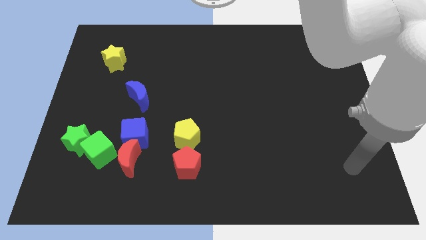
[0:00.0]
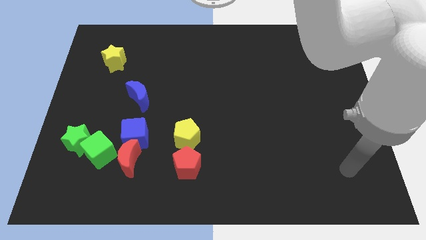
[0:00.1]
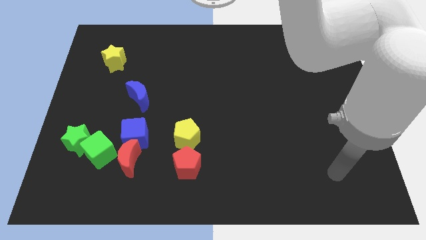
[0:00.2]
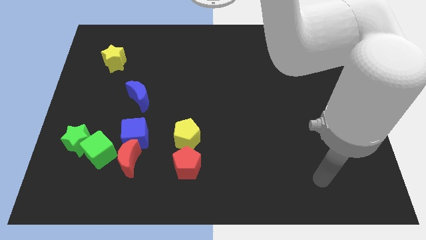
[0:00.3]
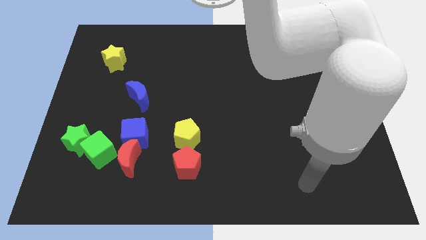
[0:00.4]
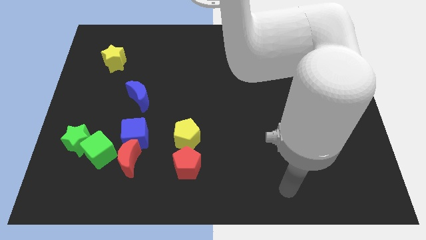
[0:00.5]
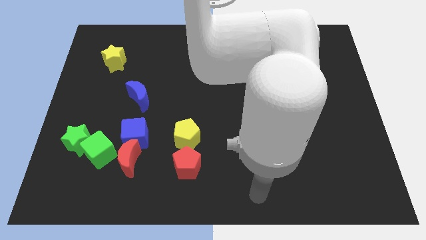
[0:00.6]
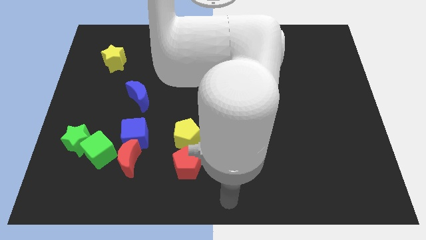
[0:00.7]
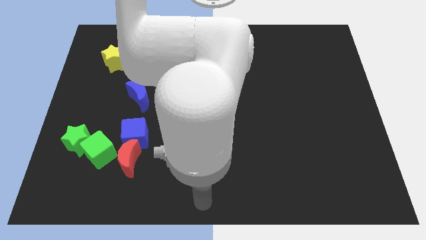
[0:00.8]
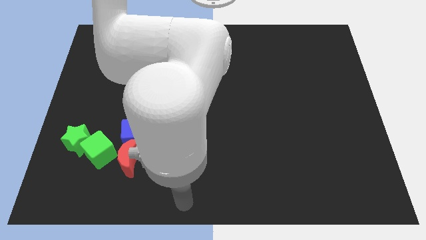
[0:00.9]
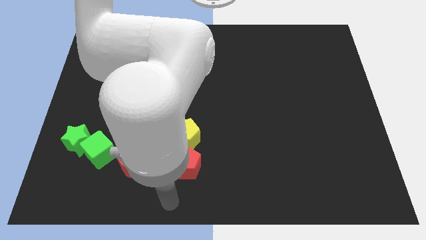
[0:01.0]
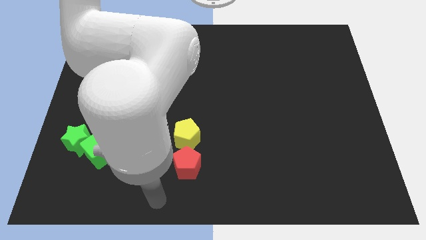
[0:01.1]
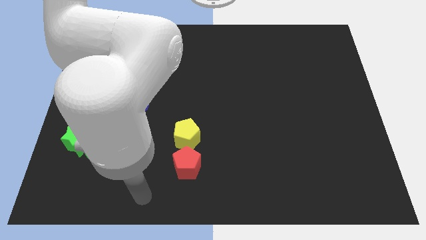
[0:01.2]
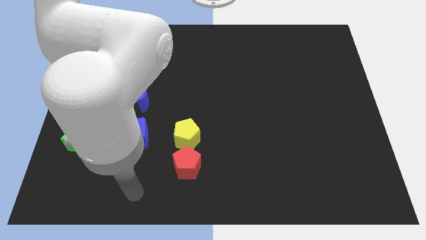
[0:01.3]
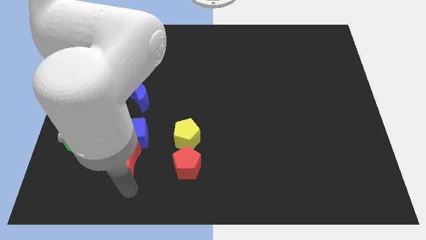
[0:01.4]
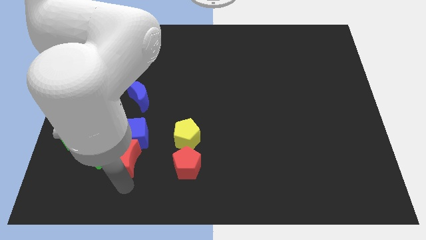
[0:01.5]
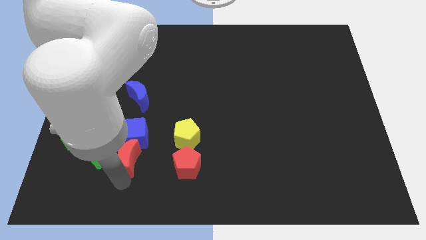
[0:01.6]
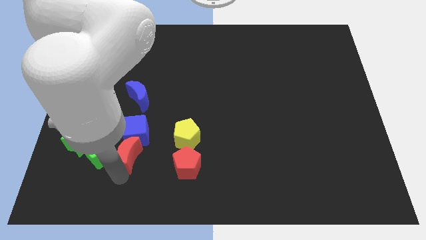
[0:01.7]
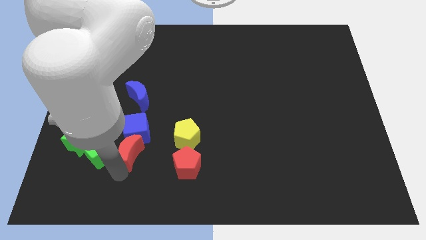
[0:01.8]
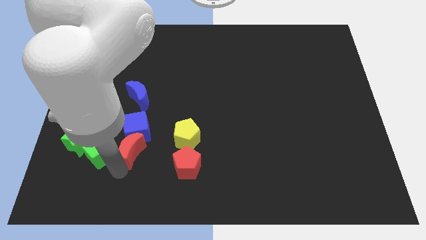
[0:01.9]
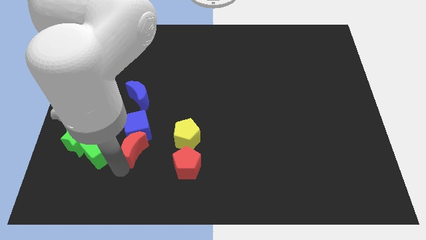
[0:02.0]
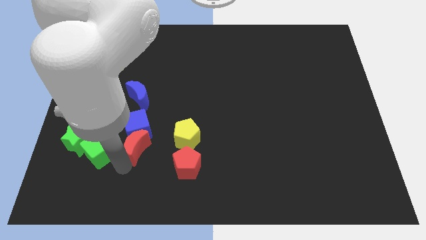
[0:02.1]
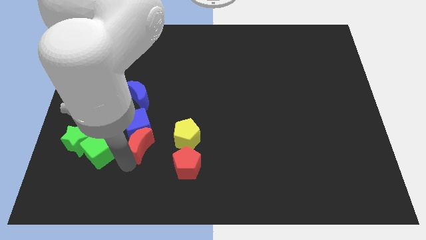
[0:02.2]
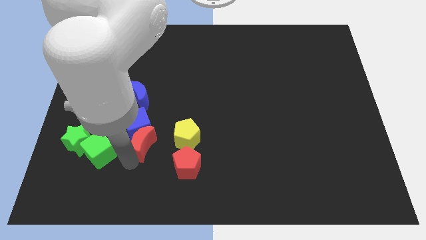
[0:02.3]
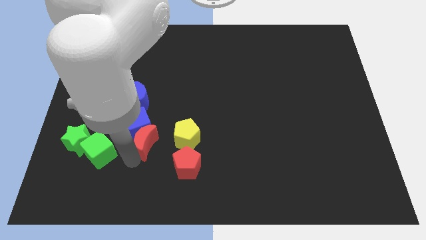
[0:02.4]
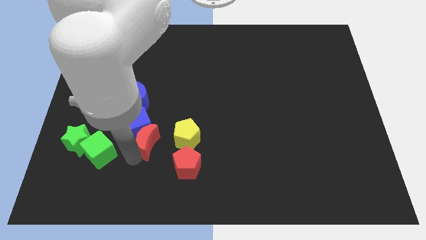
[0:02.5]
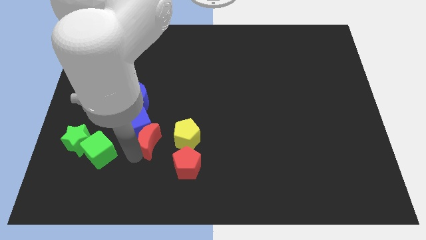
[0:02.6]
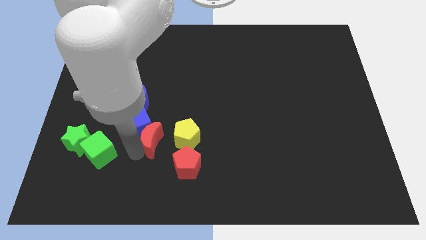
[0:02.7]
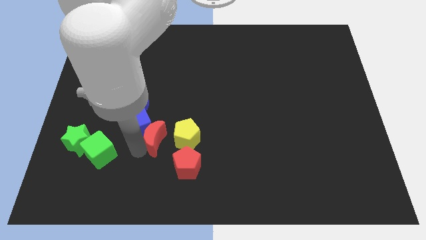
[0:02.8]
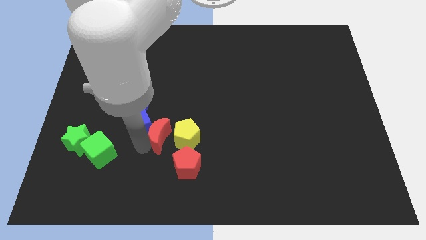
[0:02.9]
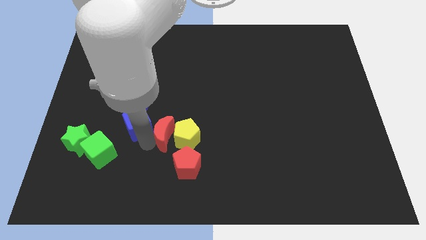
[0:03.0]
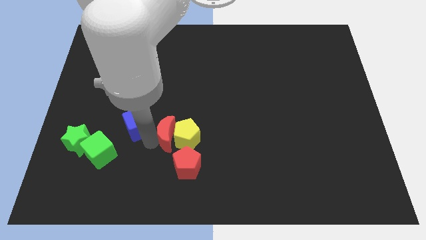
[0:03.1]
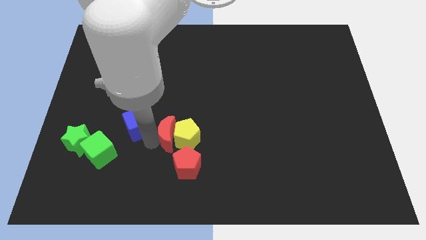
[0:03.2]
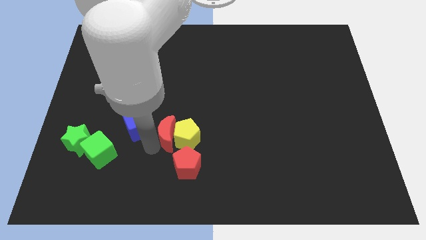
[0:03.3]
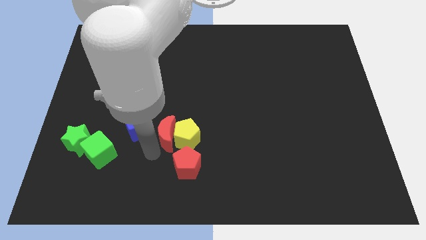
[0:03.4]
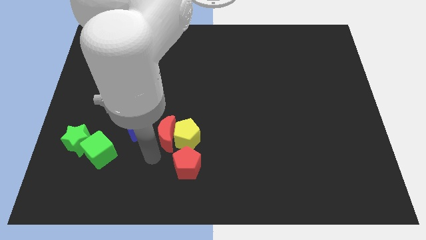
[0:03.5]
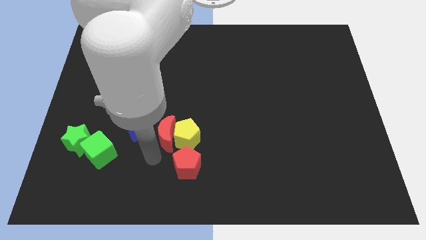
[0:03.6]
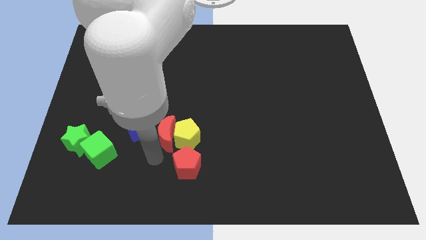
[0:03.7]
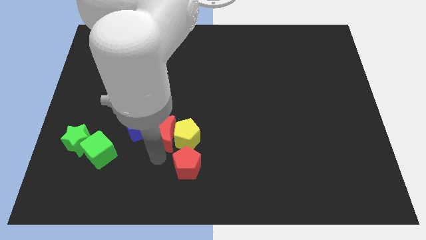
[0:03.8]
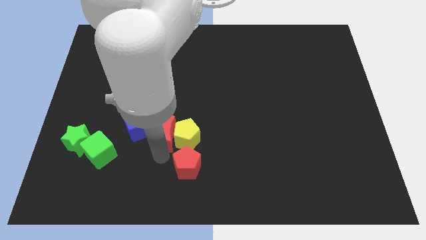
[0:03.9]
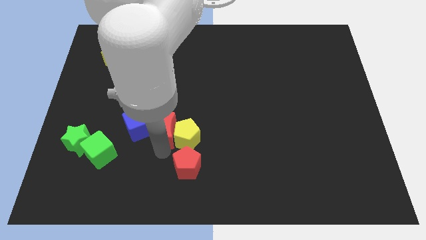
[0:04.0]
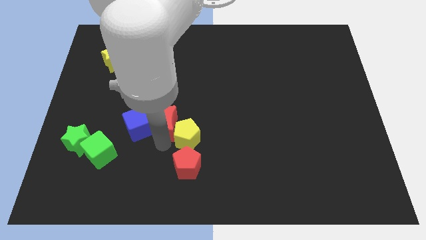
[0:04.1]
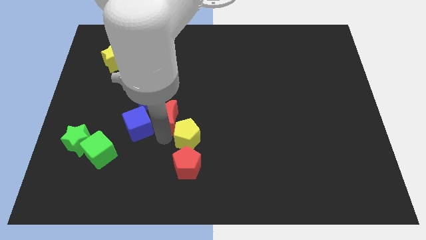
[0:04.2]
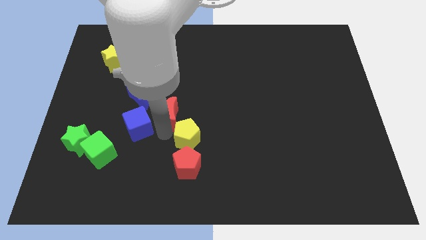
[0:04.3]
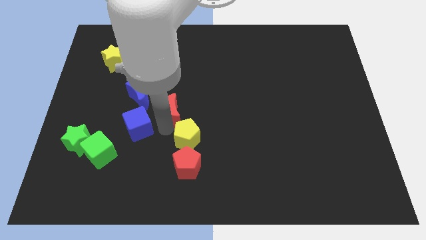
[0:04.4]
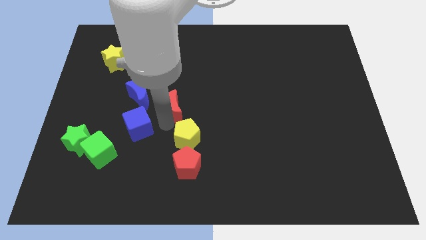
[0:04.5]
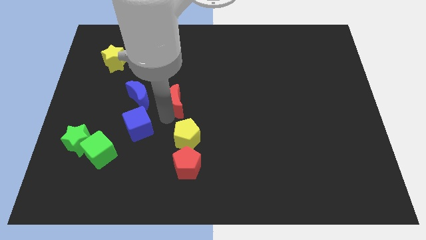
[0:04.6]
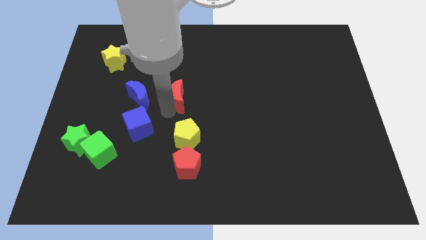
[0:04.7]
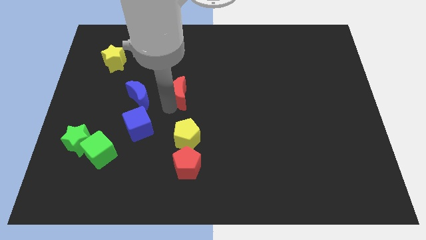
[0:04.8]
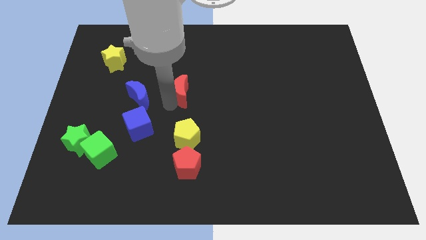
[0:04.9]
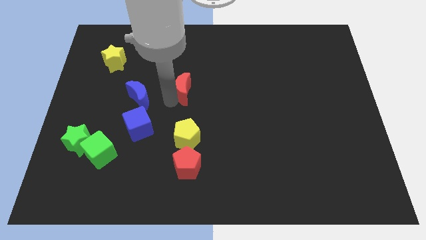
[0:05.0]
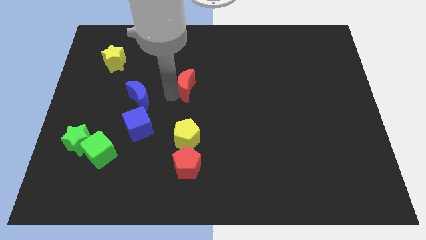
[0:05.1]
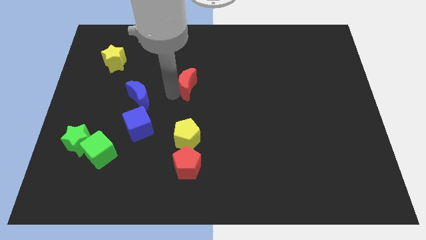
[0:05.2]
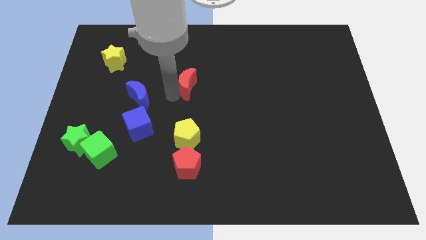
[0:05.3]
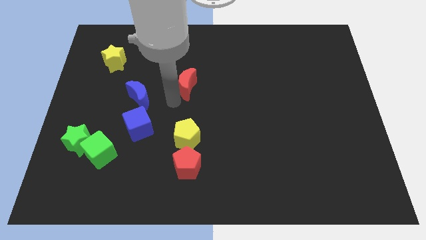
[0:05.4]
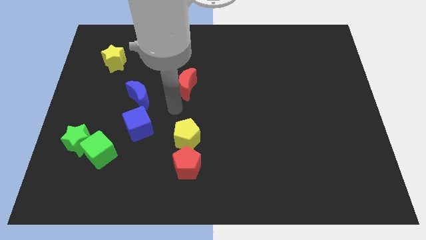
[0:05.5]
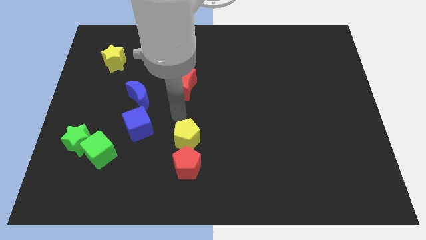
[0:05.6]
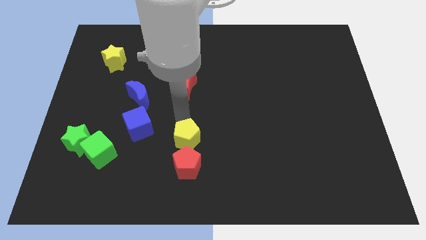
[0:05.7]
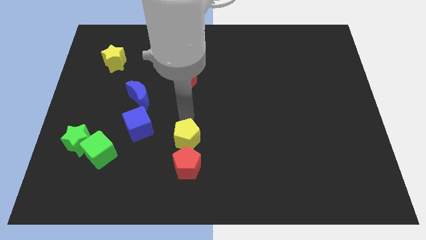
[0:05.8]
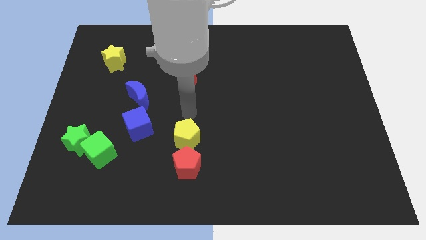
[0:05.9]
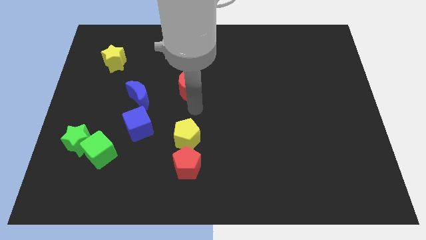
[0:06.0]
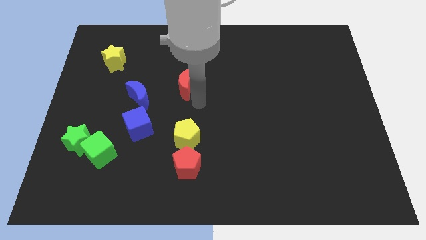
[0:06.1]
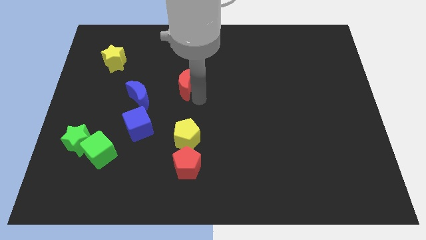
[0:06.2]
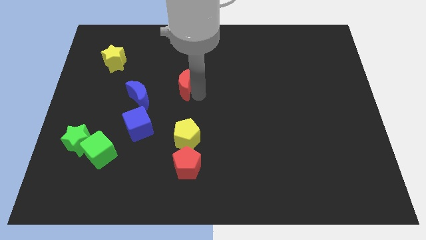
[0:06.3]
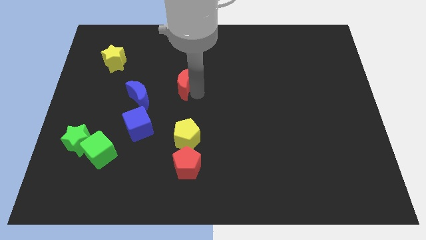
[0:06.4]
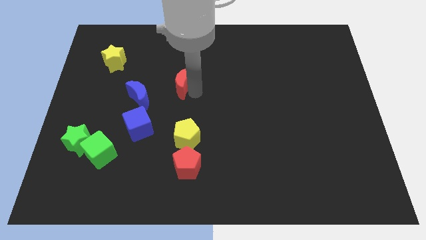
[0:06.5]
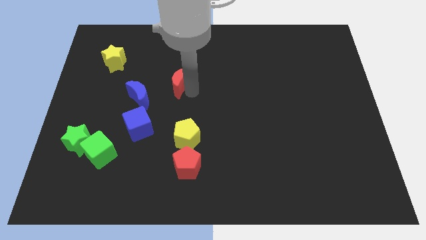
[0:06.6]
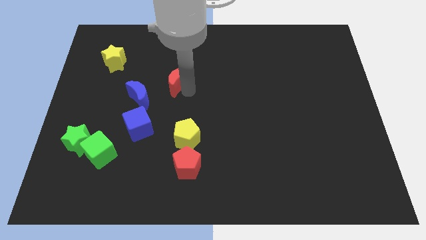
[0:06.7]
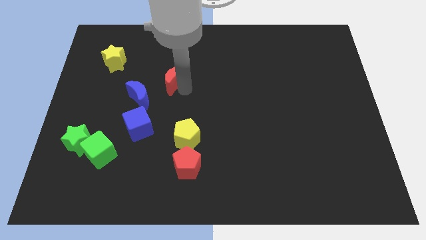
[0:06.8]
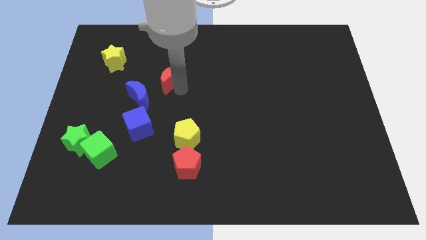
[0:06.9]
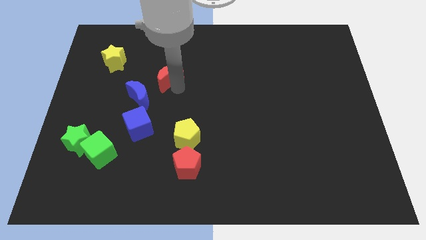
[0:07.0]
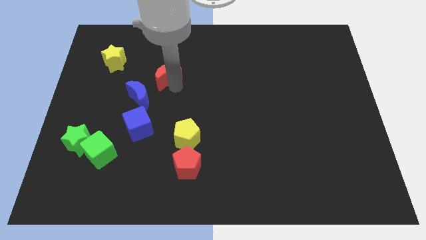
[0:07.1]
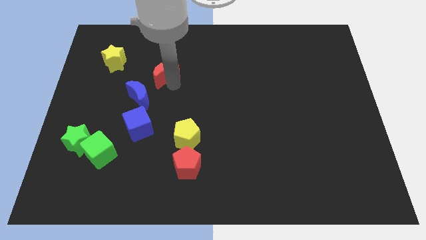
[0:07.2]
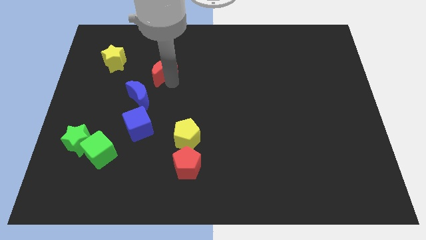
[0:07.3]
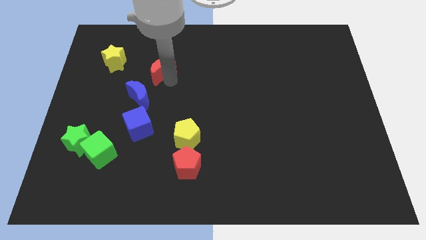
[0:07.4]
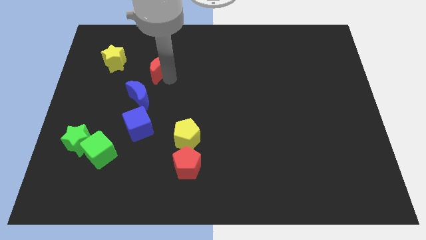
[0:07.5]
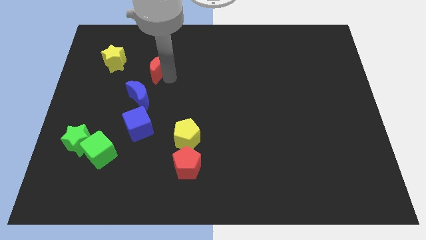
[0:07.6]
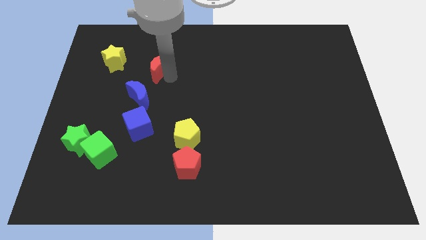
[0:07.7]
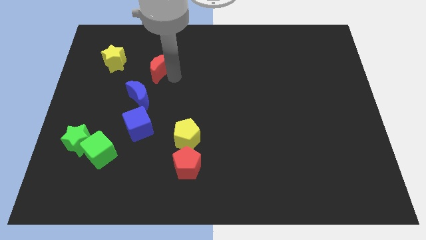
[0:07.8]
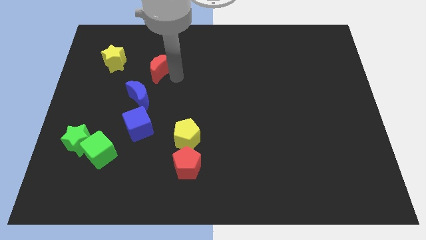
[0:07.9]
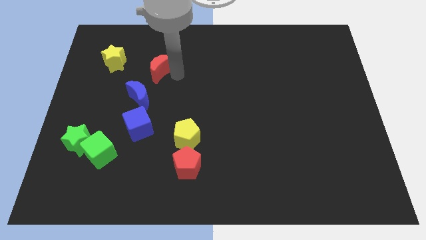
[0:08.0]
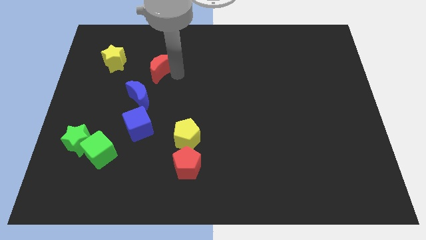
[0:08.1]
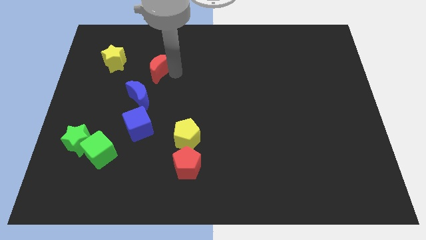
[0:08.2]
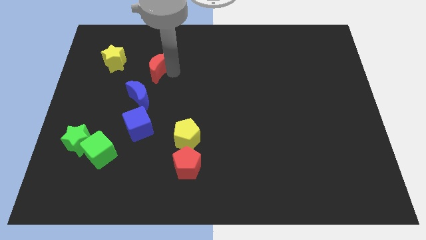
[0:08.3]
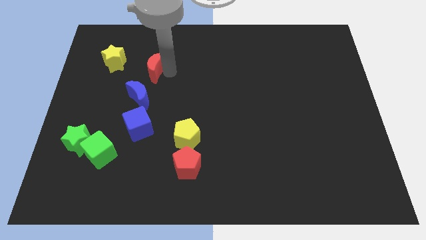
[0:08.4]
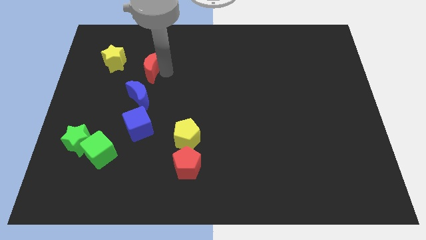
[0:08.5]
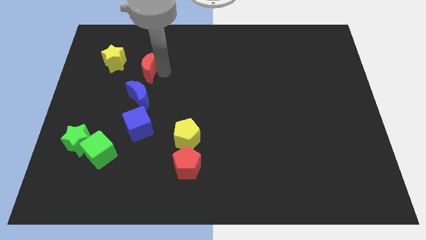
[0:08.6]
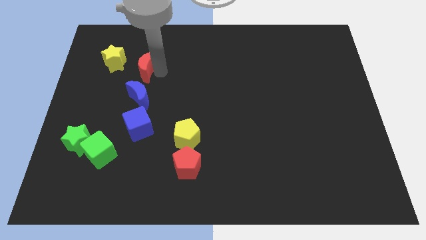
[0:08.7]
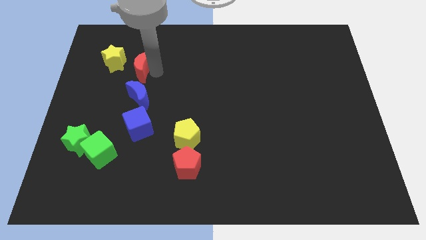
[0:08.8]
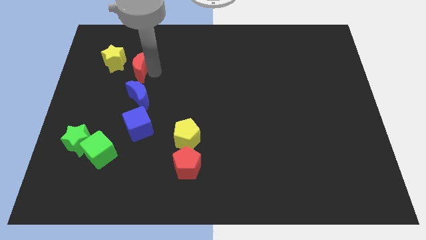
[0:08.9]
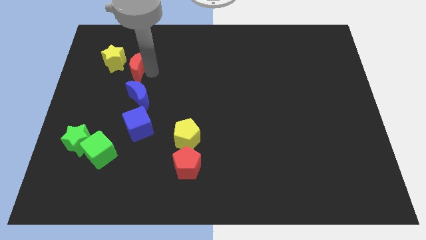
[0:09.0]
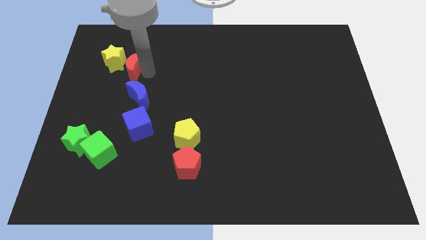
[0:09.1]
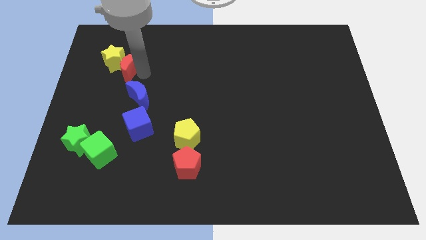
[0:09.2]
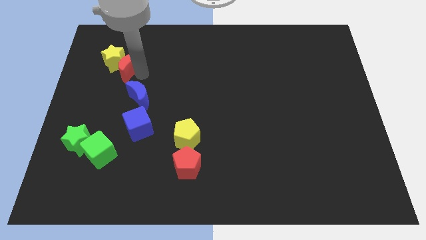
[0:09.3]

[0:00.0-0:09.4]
move the red moon close to the yellow star
